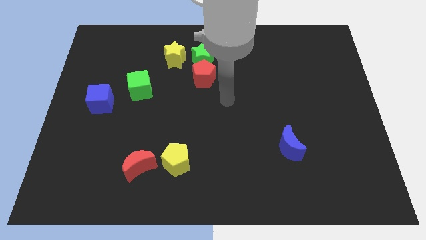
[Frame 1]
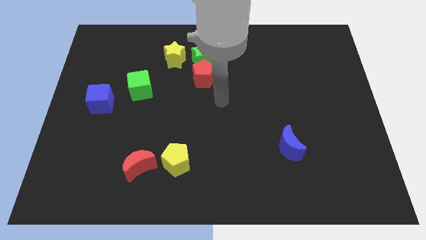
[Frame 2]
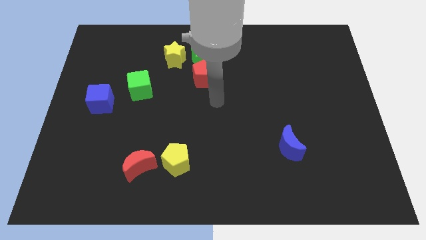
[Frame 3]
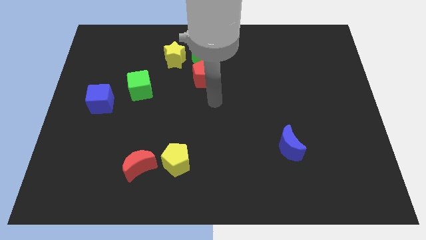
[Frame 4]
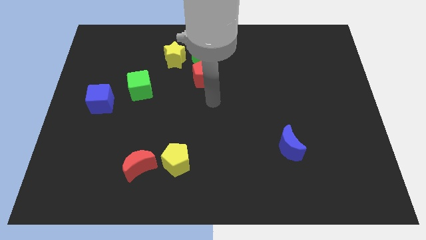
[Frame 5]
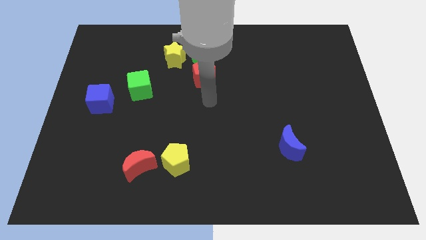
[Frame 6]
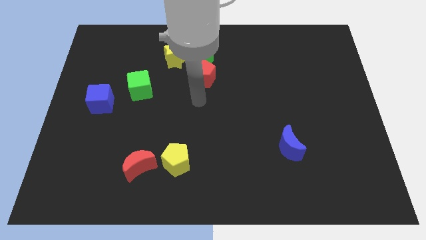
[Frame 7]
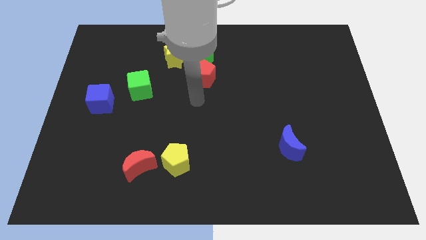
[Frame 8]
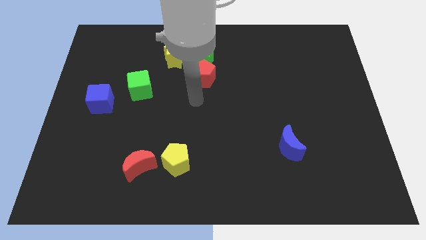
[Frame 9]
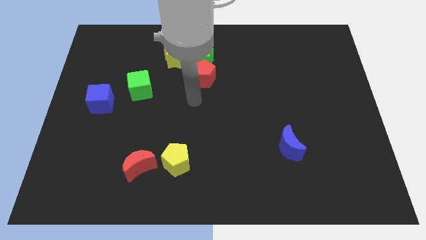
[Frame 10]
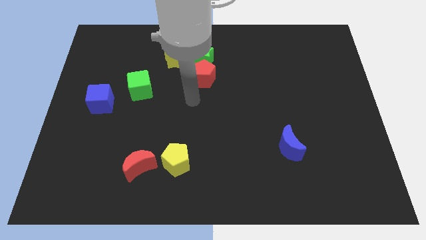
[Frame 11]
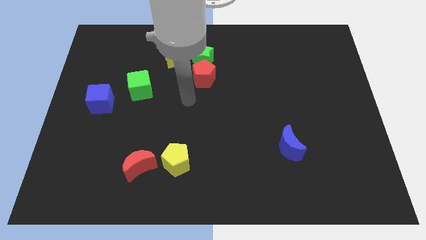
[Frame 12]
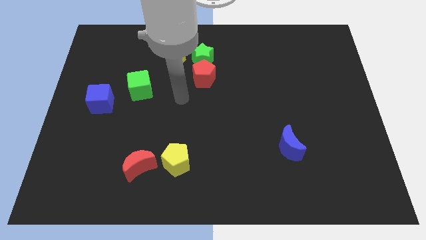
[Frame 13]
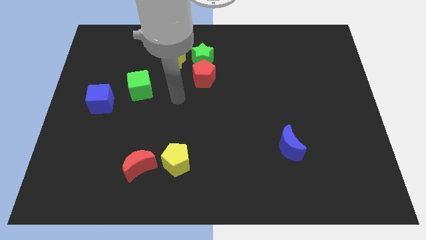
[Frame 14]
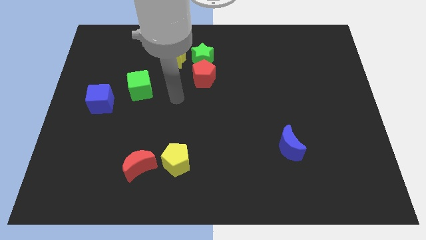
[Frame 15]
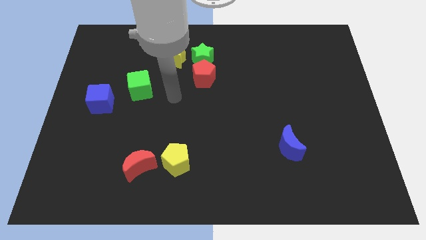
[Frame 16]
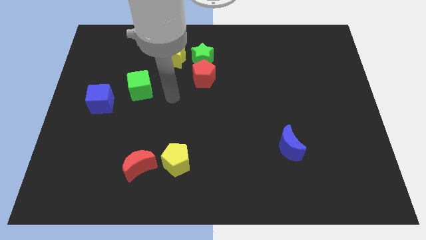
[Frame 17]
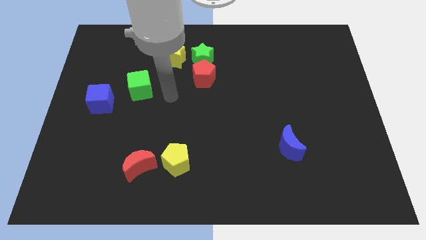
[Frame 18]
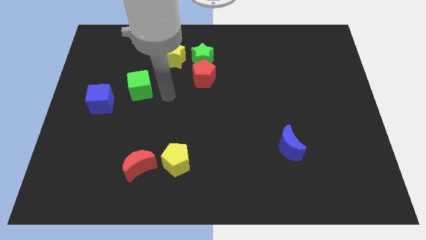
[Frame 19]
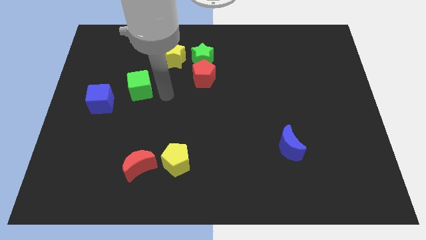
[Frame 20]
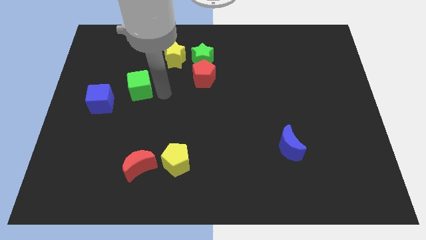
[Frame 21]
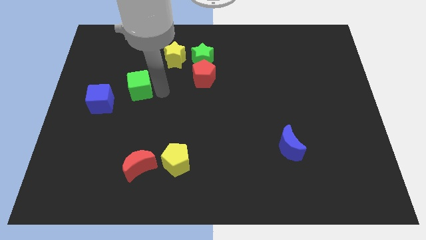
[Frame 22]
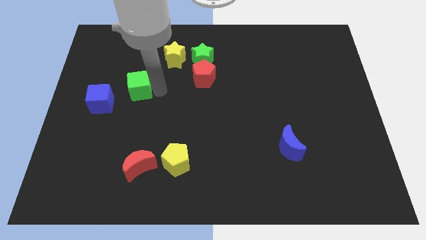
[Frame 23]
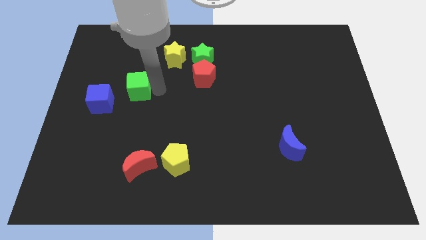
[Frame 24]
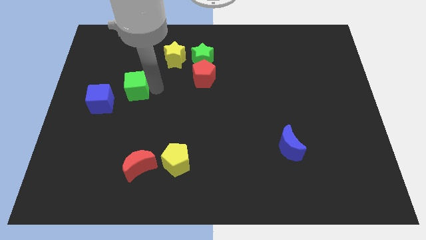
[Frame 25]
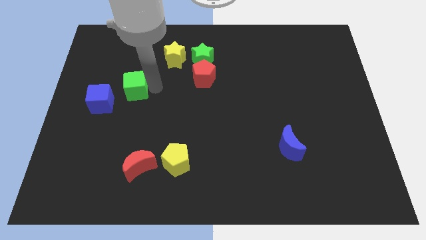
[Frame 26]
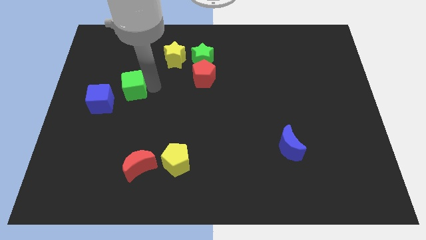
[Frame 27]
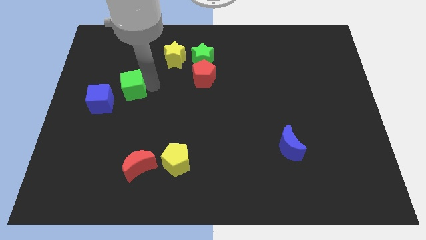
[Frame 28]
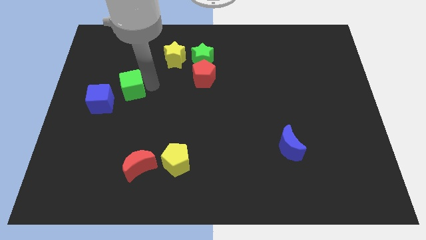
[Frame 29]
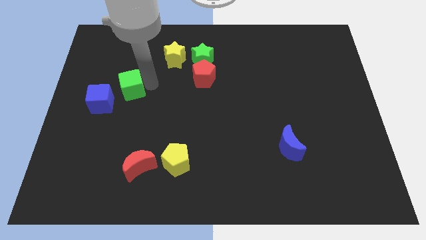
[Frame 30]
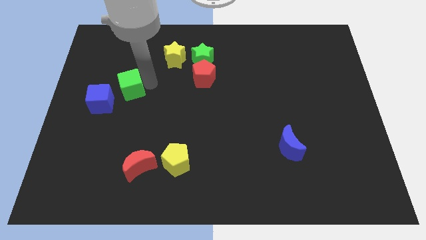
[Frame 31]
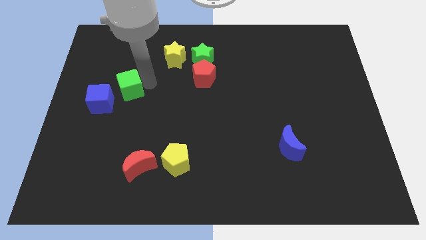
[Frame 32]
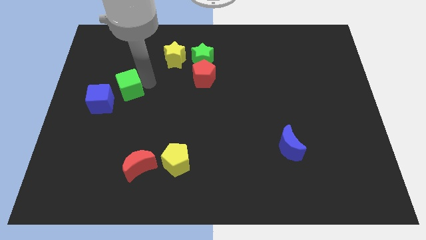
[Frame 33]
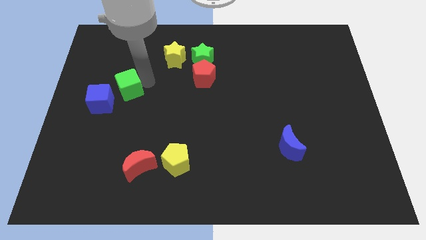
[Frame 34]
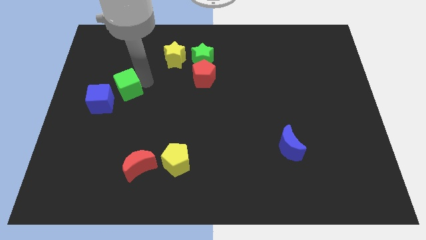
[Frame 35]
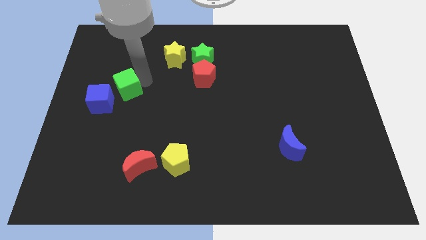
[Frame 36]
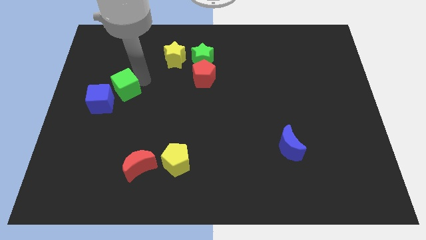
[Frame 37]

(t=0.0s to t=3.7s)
move your arm close to the green cube

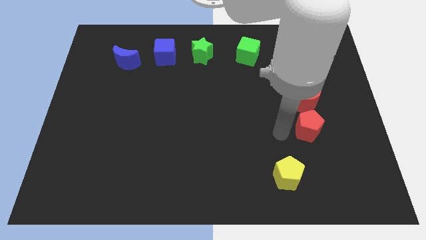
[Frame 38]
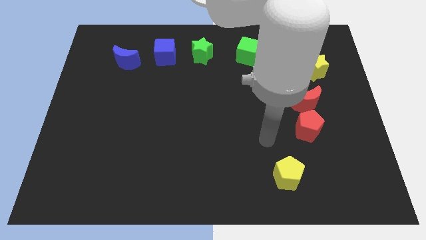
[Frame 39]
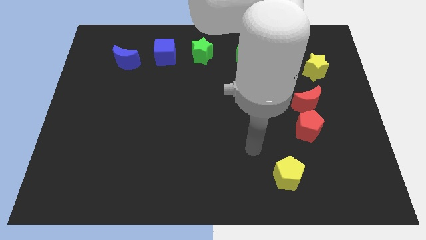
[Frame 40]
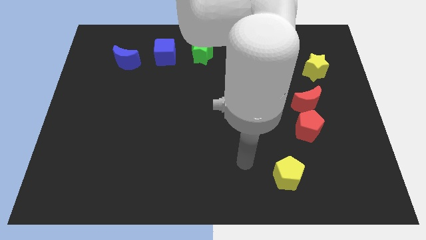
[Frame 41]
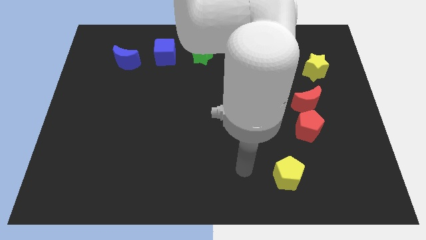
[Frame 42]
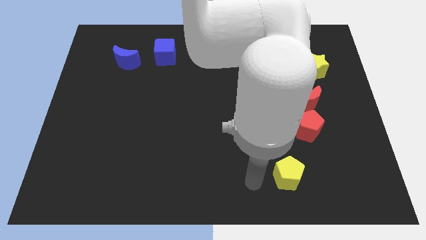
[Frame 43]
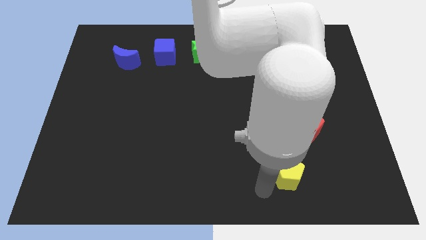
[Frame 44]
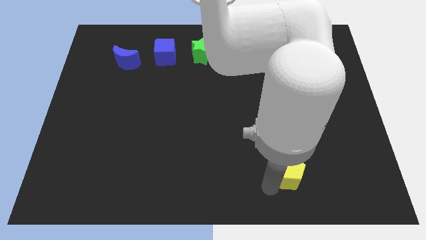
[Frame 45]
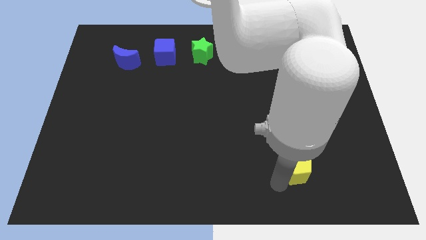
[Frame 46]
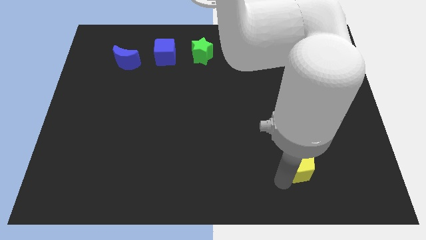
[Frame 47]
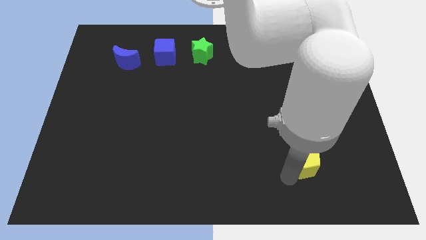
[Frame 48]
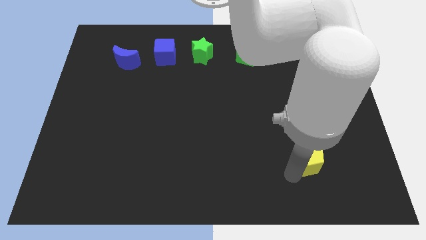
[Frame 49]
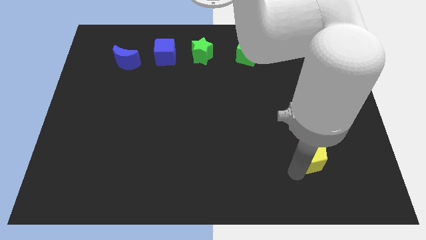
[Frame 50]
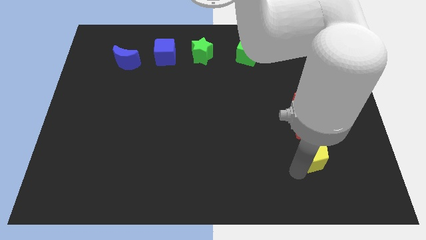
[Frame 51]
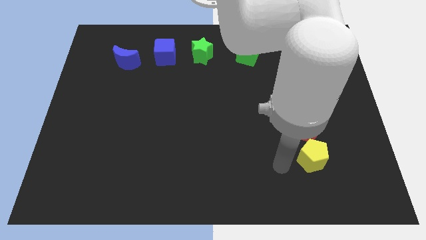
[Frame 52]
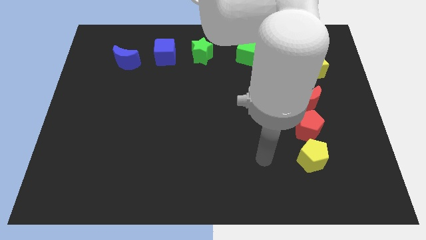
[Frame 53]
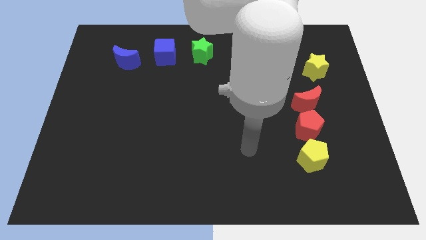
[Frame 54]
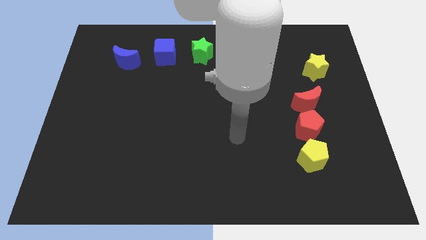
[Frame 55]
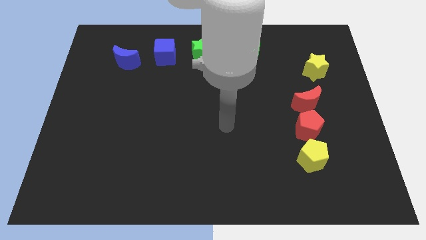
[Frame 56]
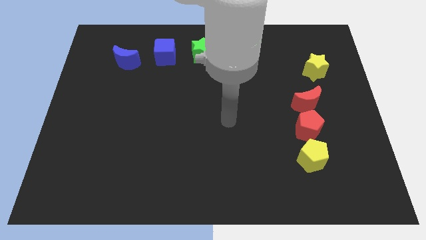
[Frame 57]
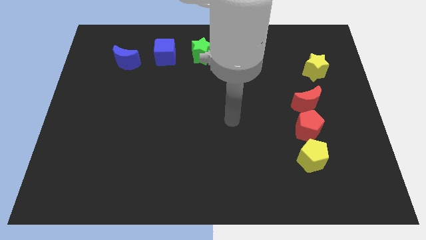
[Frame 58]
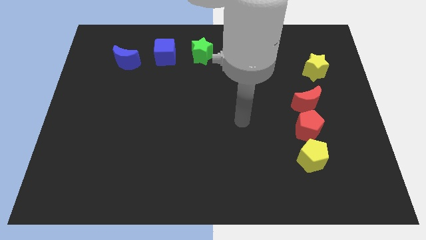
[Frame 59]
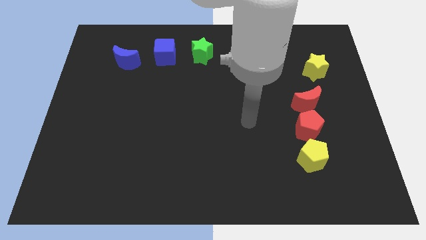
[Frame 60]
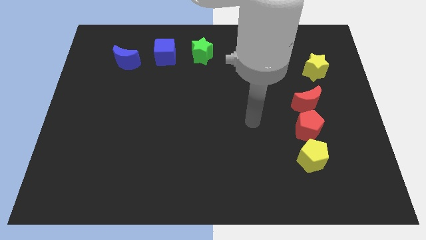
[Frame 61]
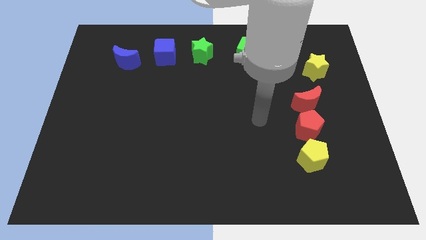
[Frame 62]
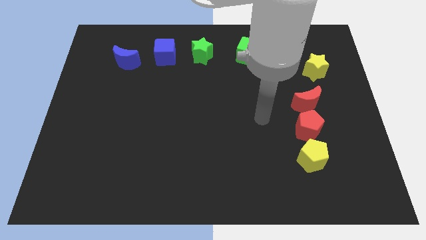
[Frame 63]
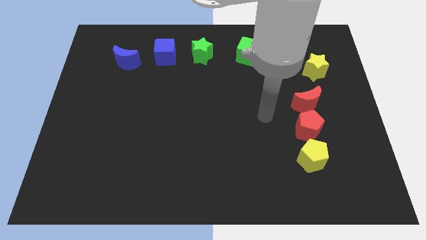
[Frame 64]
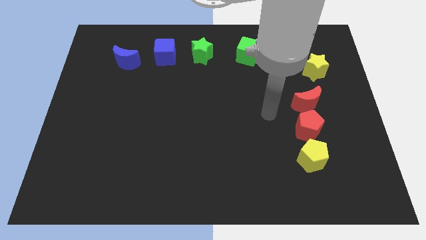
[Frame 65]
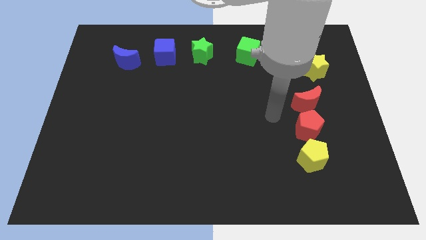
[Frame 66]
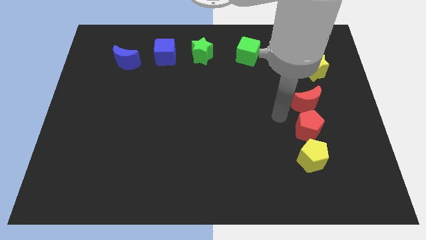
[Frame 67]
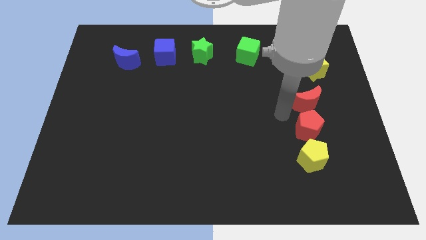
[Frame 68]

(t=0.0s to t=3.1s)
place yellow pentagon to the bottom of red pentagon

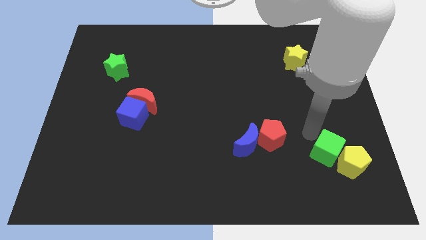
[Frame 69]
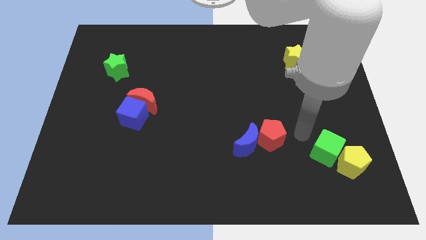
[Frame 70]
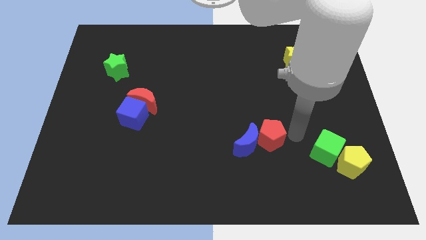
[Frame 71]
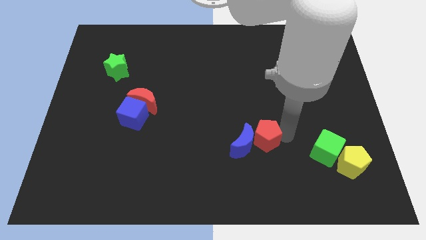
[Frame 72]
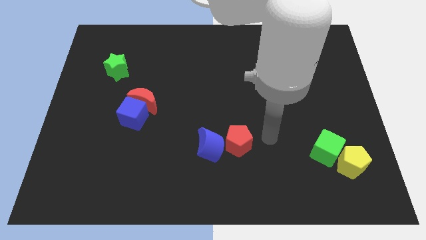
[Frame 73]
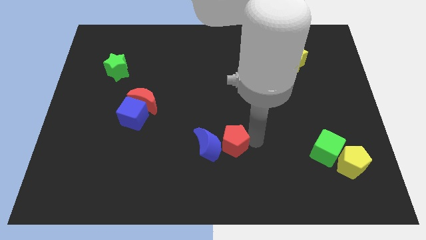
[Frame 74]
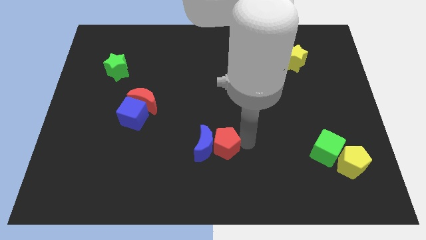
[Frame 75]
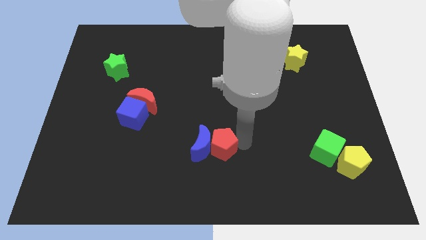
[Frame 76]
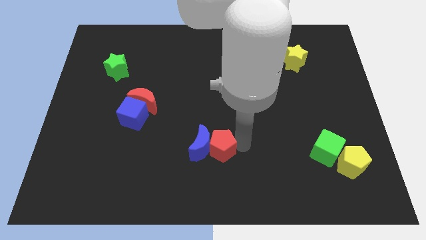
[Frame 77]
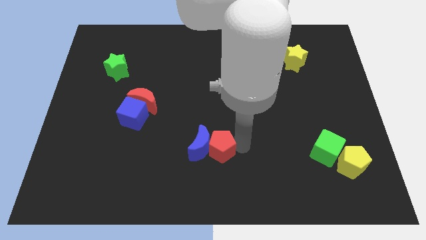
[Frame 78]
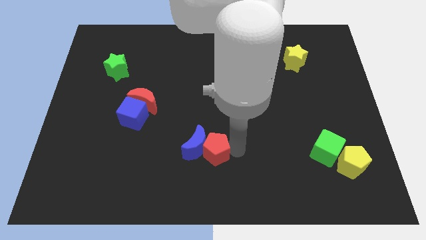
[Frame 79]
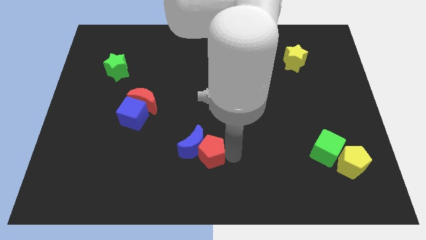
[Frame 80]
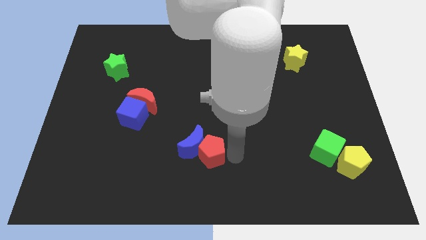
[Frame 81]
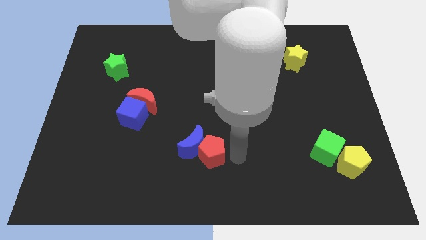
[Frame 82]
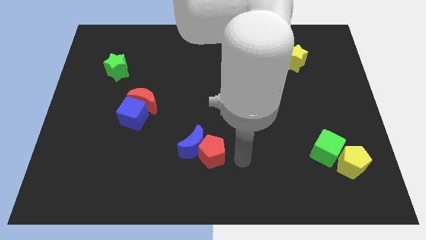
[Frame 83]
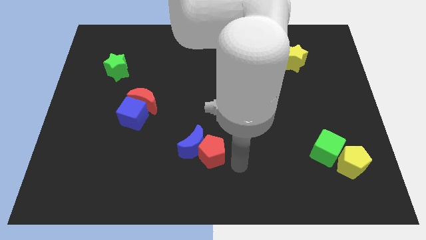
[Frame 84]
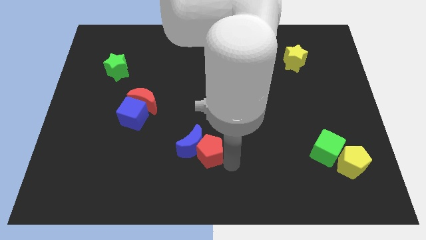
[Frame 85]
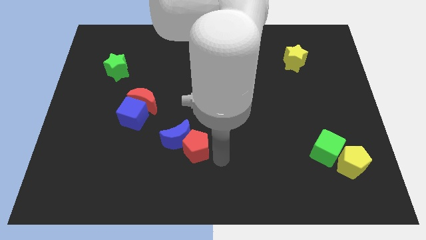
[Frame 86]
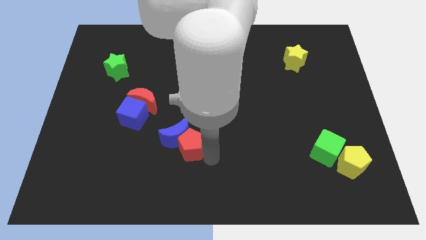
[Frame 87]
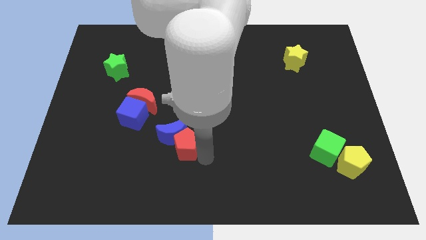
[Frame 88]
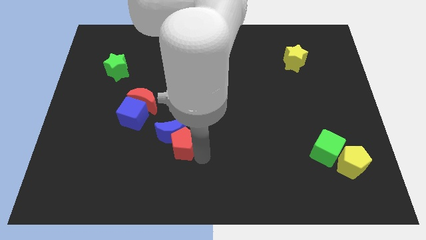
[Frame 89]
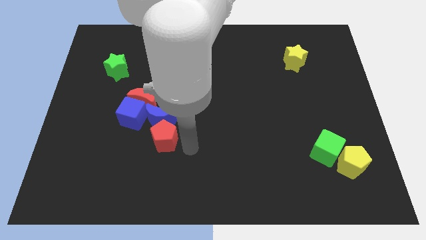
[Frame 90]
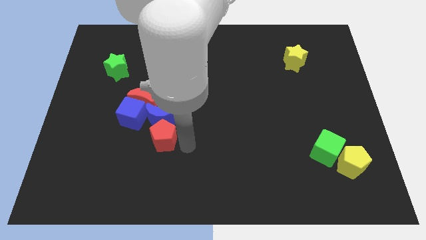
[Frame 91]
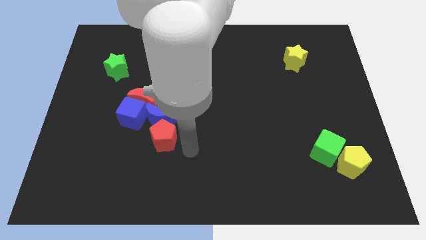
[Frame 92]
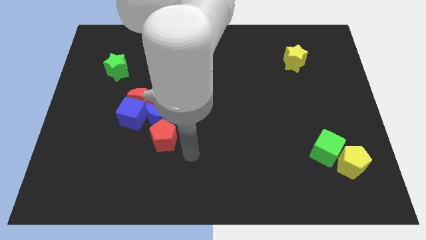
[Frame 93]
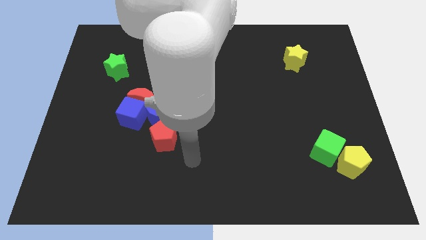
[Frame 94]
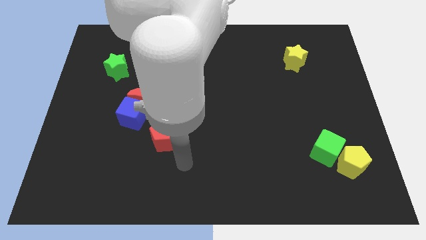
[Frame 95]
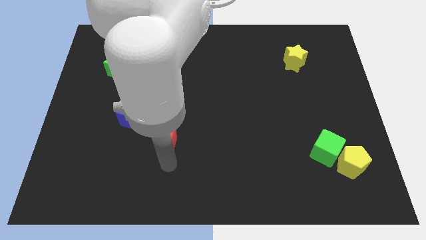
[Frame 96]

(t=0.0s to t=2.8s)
move red pentagon upwards
